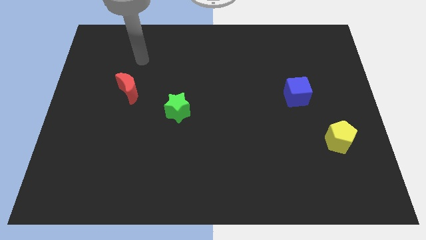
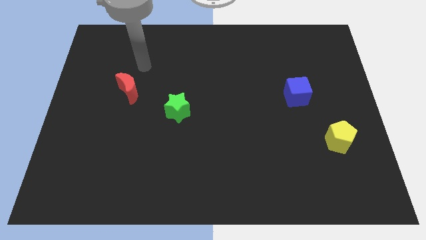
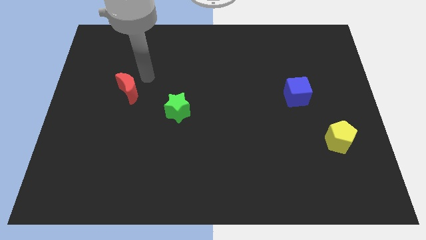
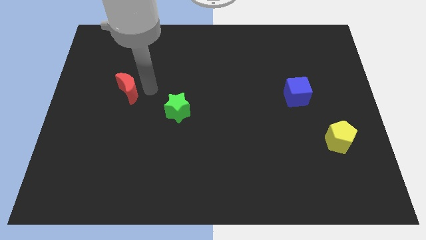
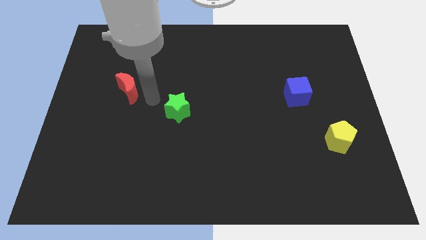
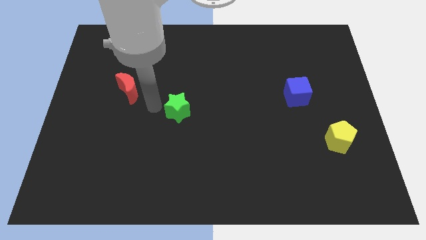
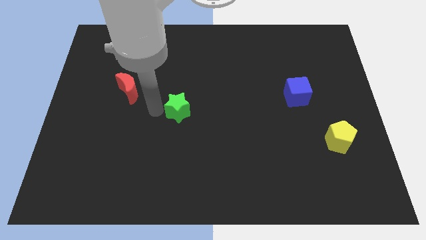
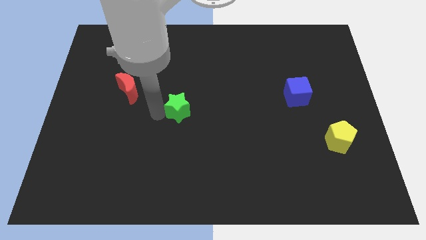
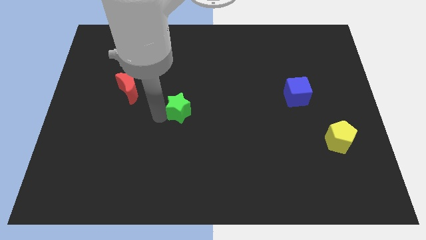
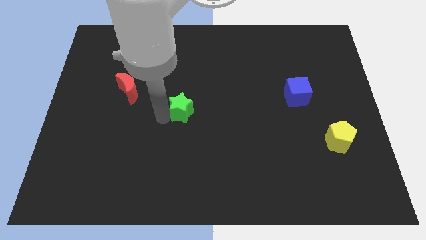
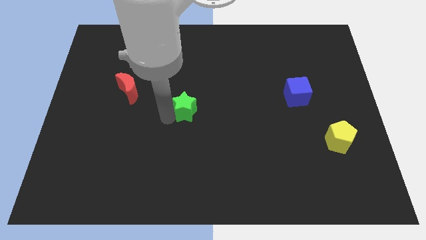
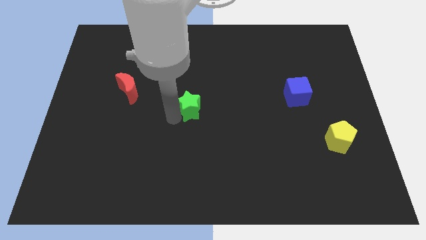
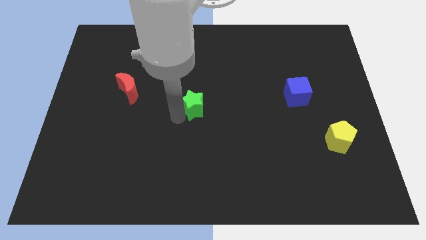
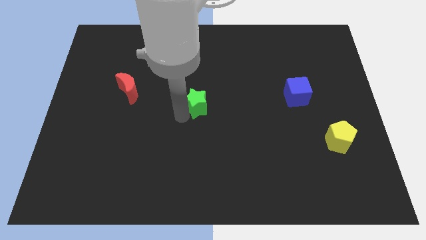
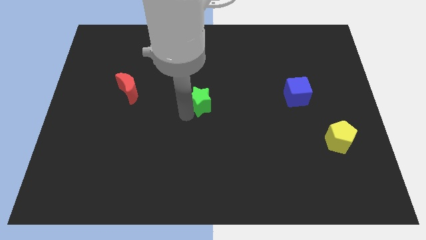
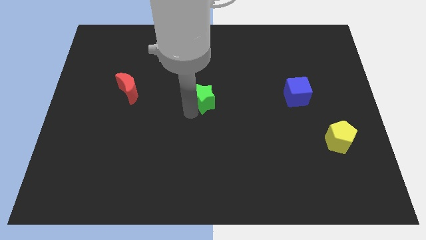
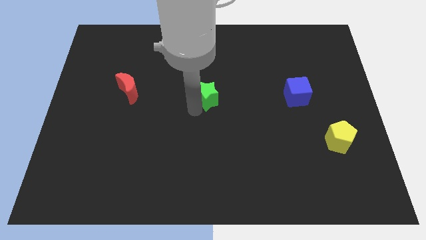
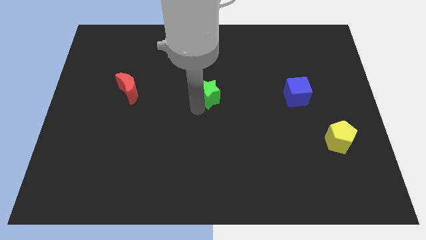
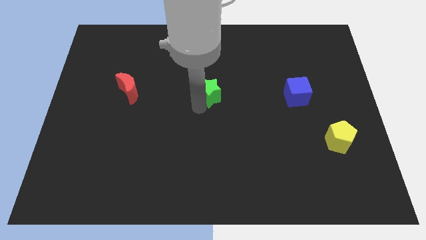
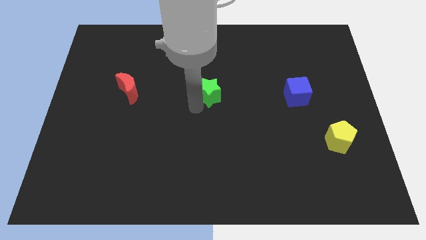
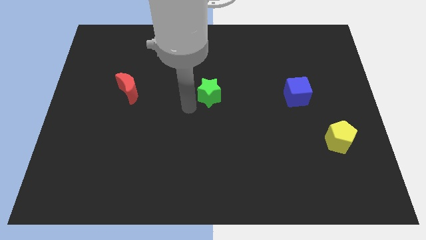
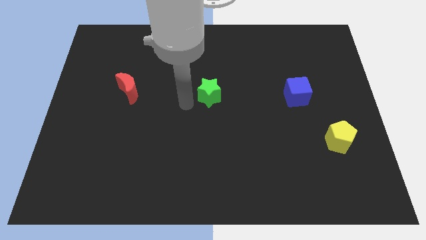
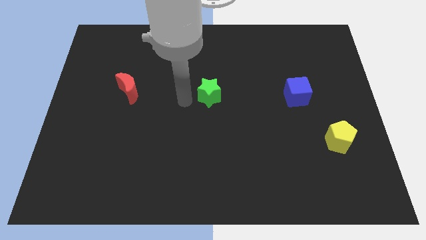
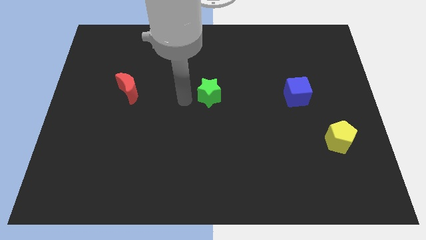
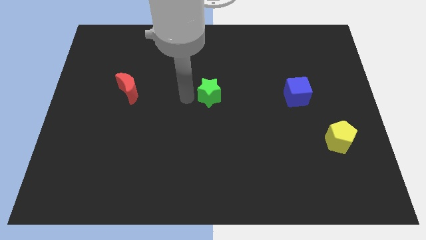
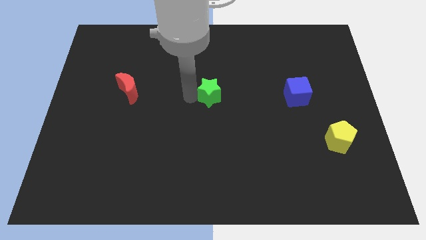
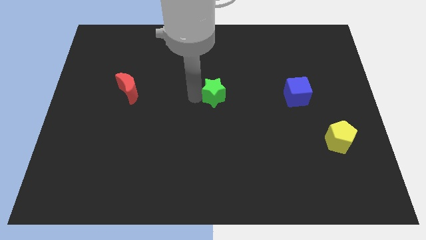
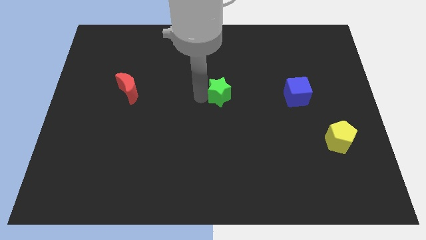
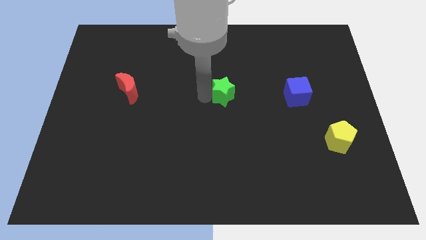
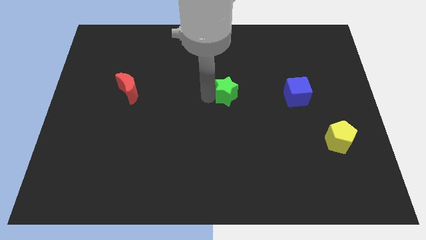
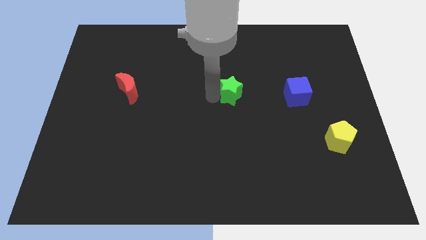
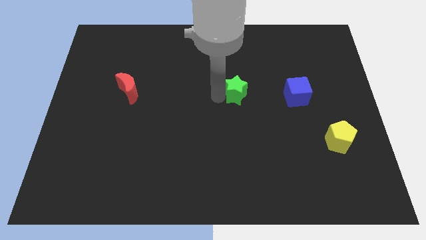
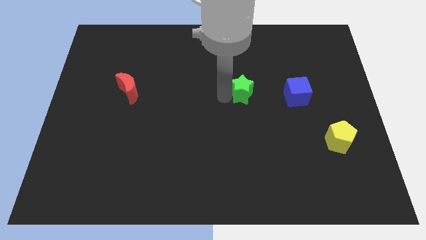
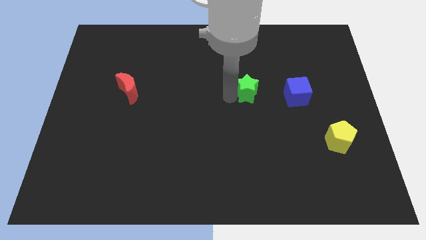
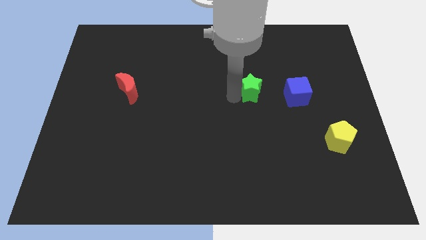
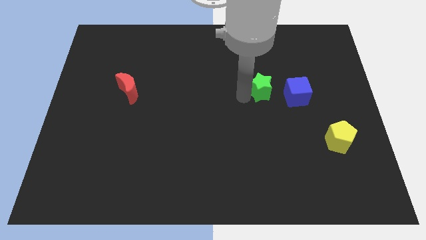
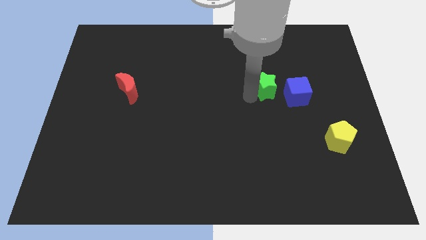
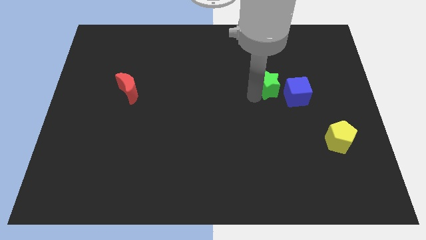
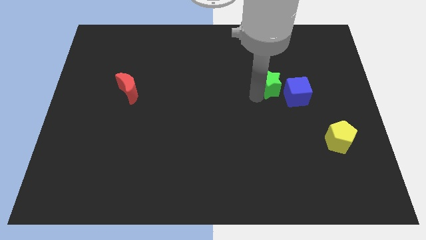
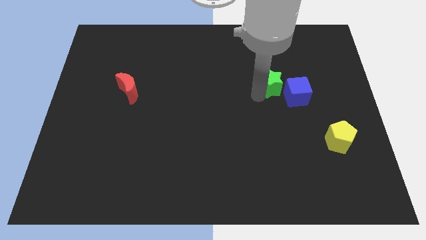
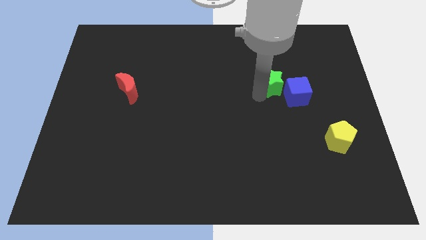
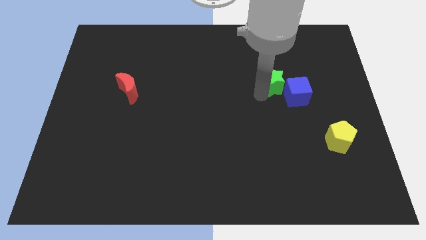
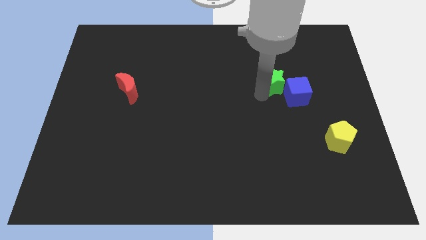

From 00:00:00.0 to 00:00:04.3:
push the green star next to the blue block

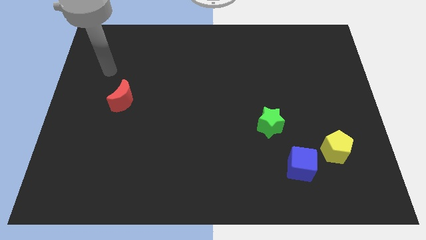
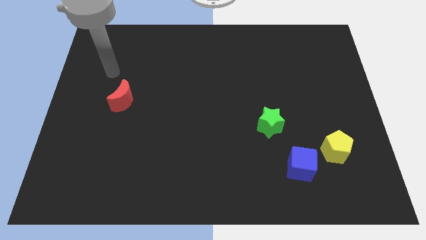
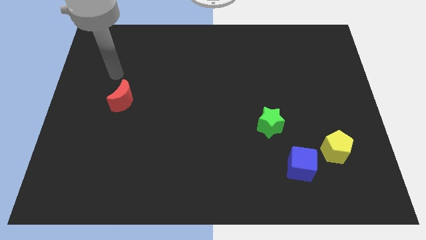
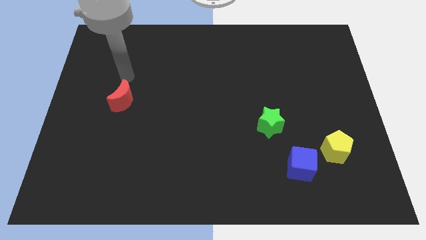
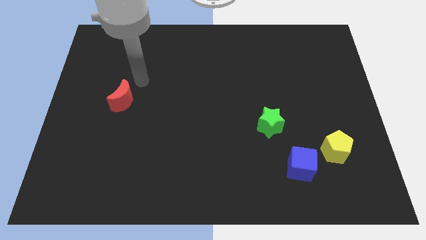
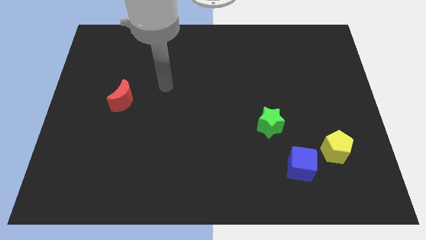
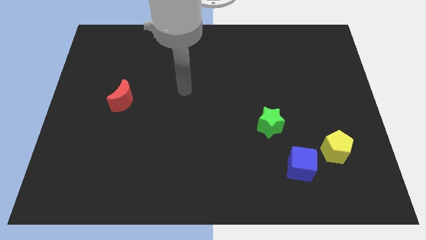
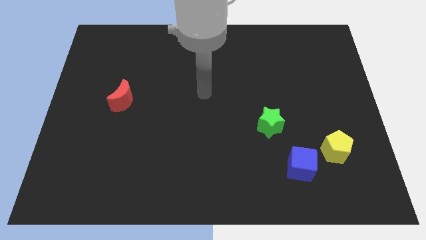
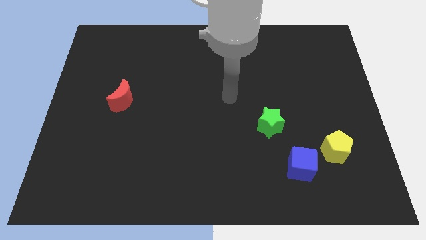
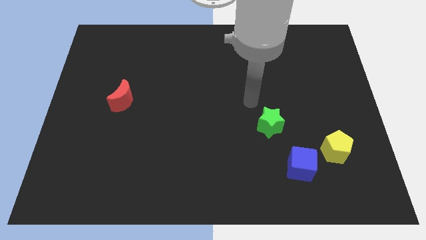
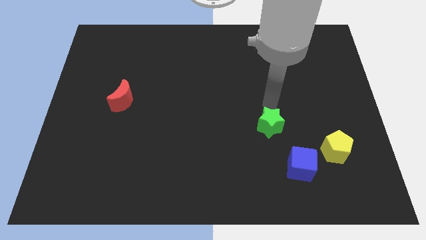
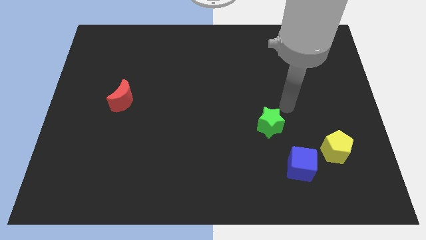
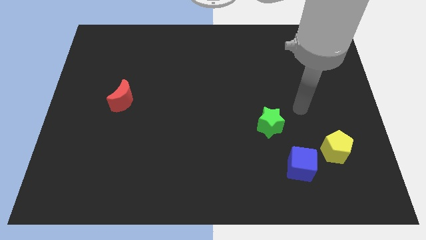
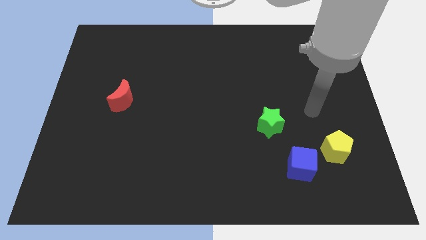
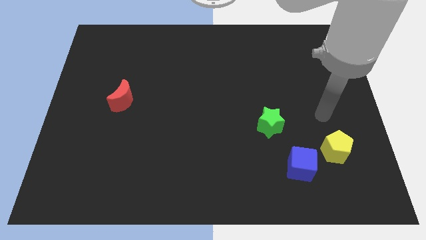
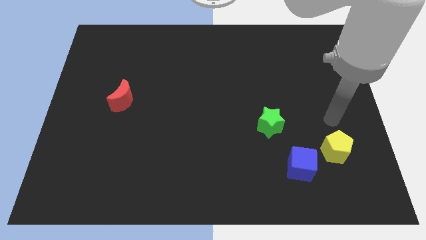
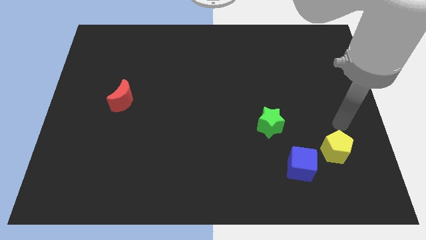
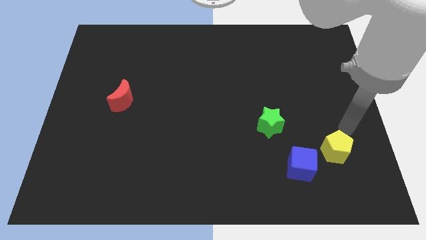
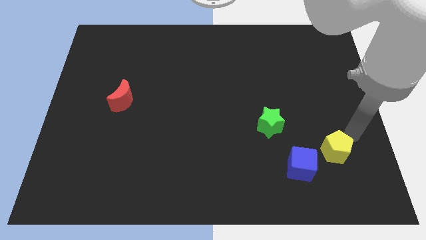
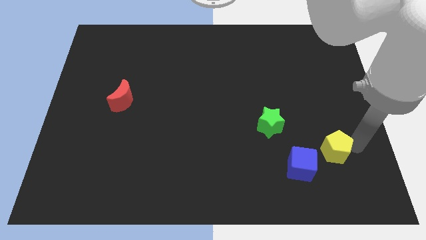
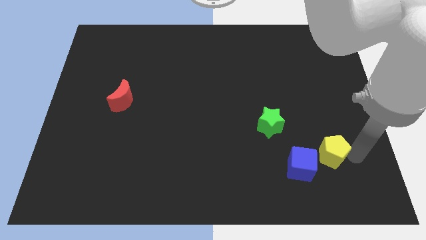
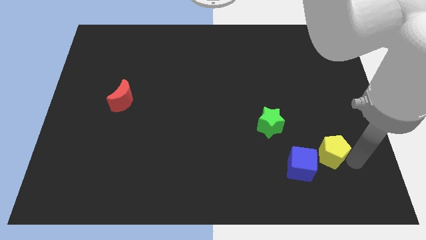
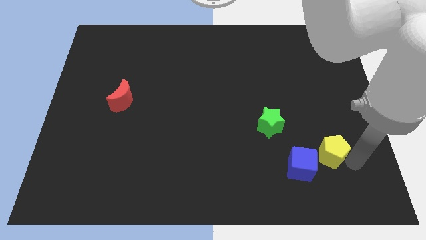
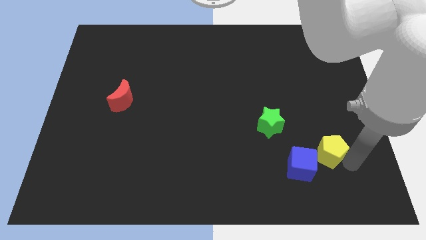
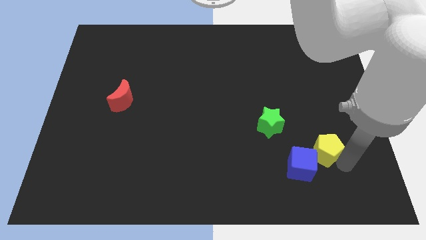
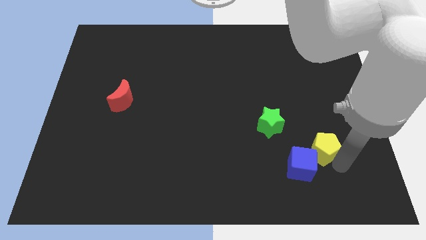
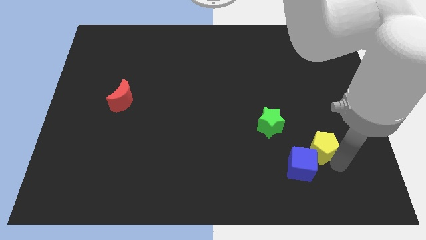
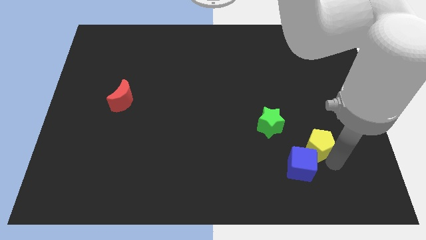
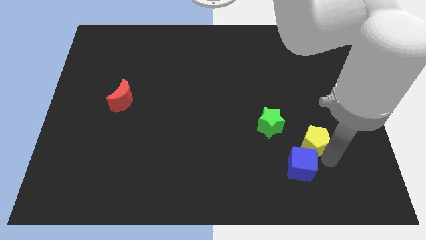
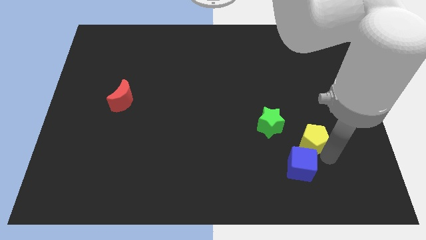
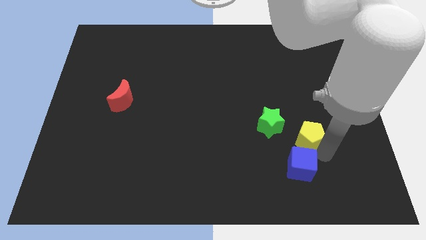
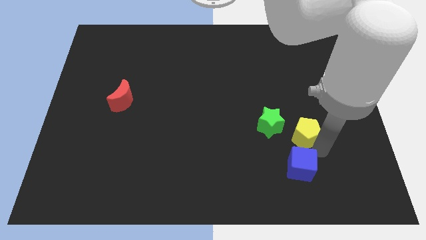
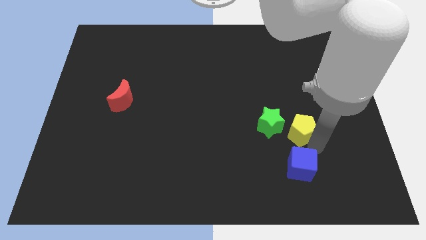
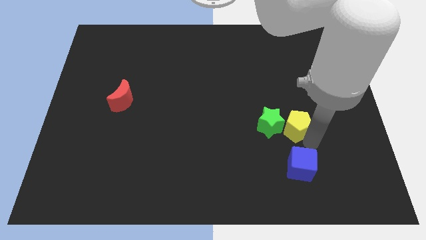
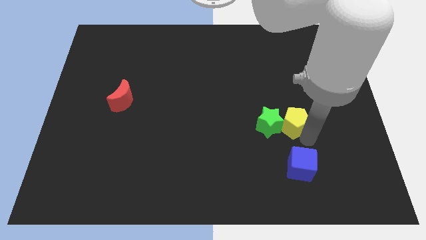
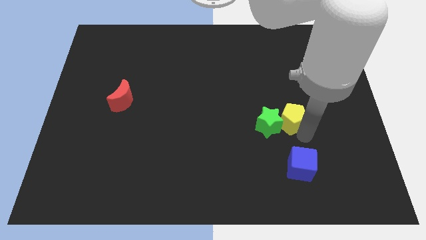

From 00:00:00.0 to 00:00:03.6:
put the yellow block next to the green block

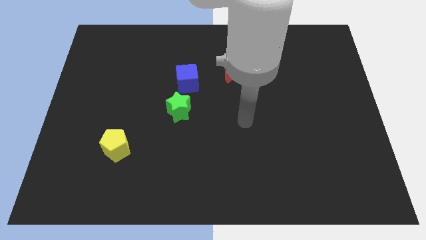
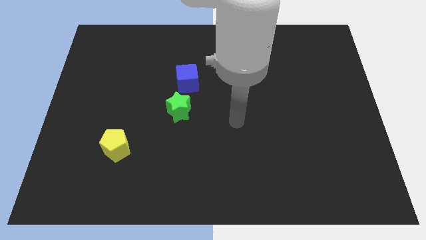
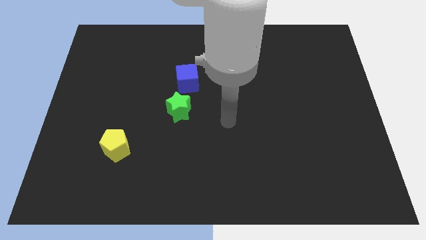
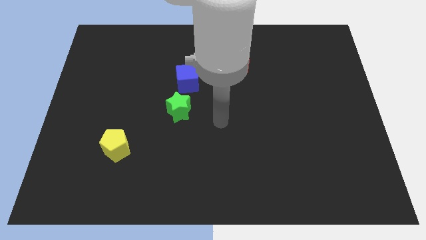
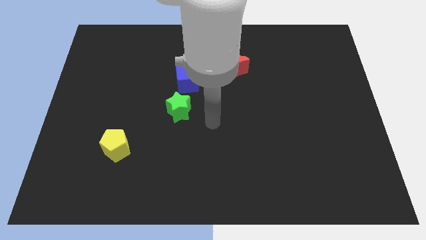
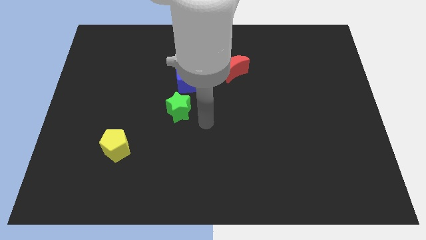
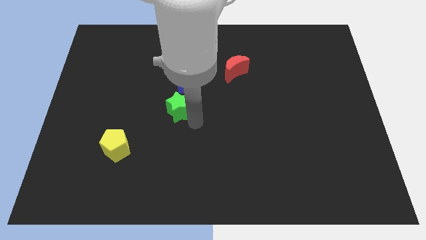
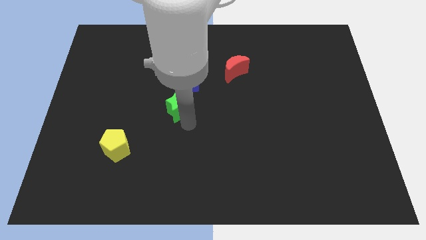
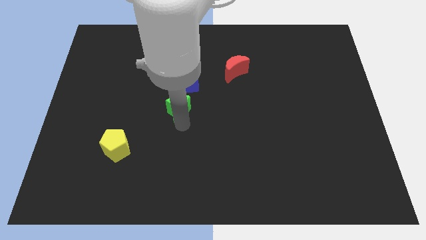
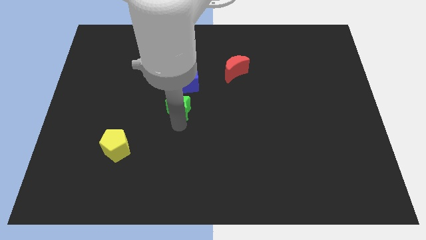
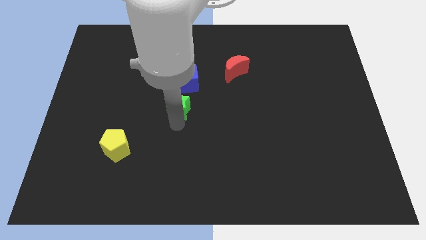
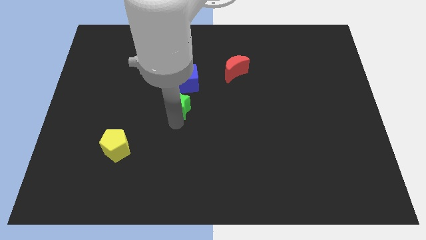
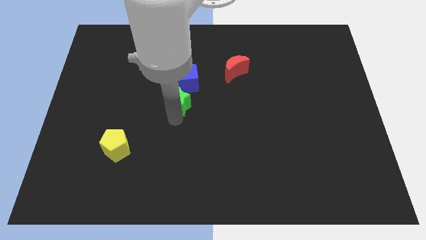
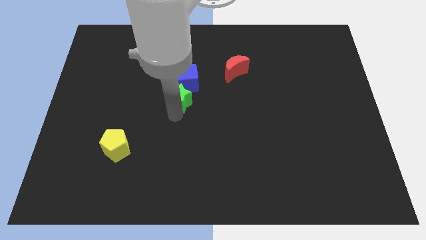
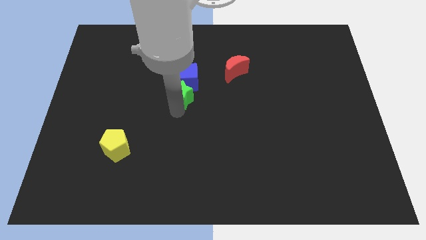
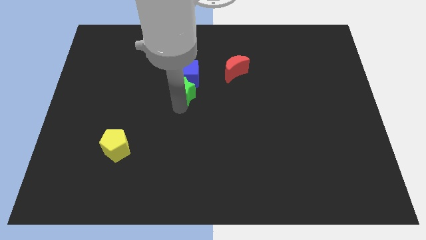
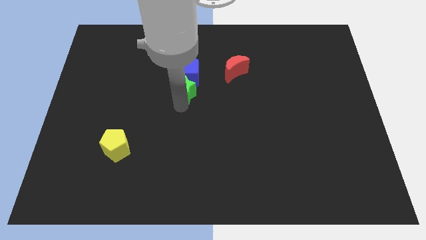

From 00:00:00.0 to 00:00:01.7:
push the green block towards the blue block
